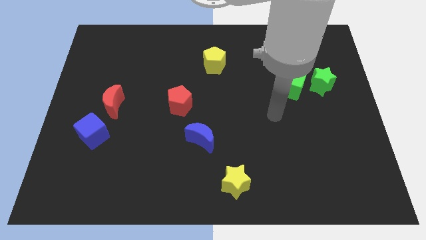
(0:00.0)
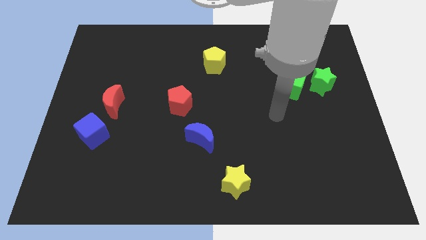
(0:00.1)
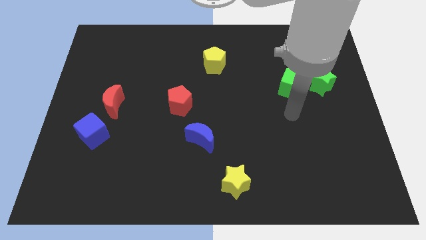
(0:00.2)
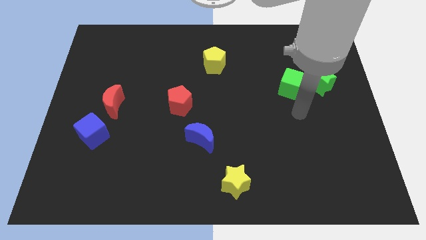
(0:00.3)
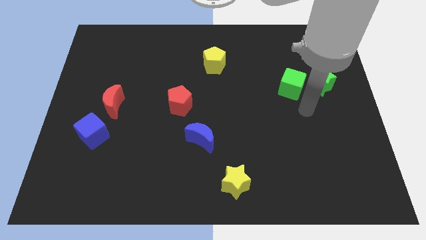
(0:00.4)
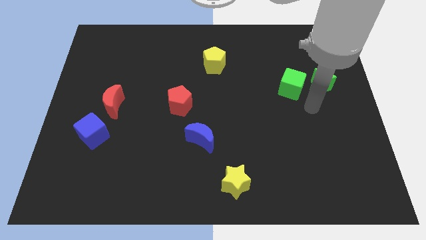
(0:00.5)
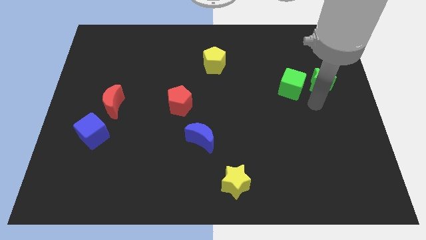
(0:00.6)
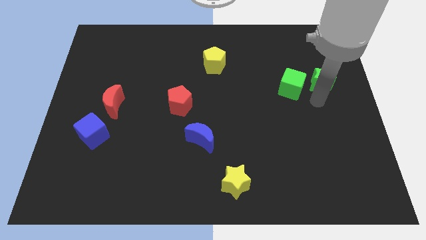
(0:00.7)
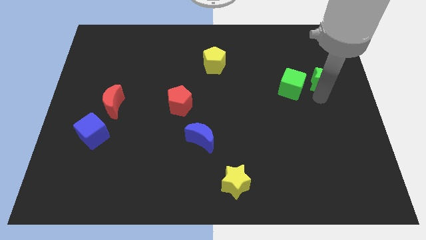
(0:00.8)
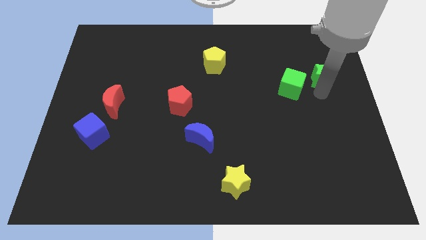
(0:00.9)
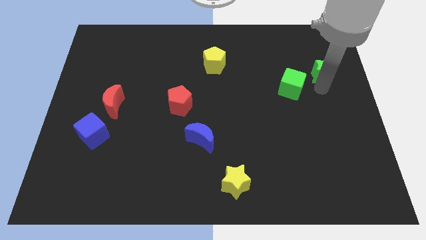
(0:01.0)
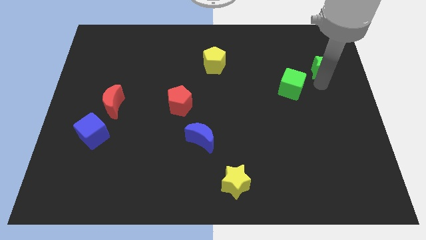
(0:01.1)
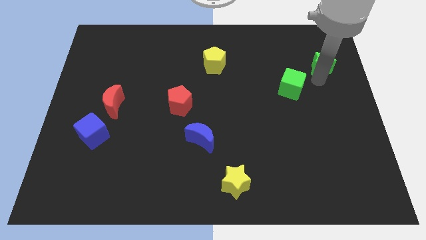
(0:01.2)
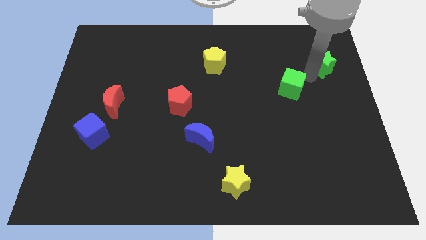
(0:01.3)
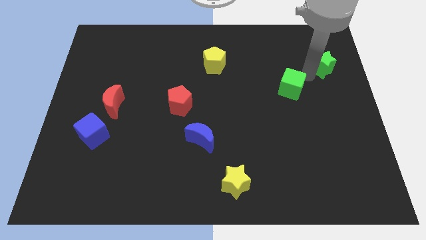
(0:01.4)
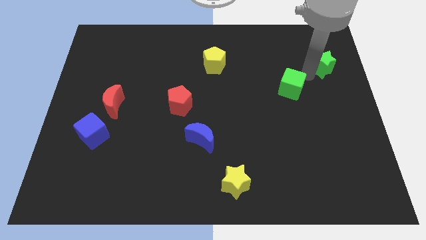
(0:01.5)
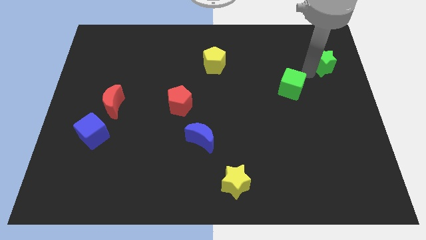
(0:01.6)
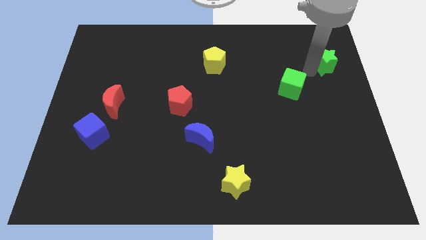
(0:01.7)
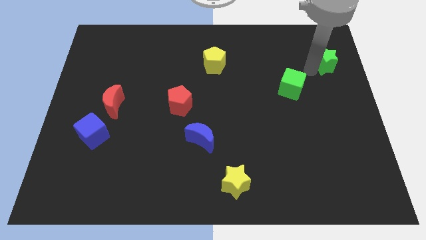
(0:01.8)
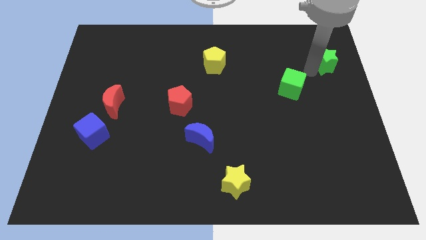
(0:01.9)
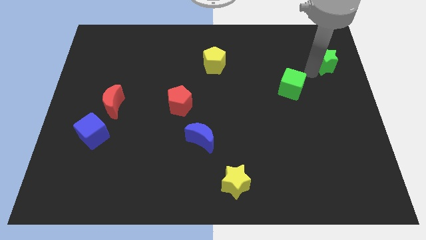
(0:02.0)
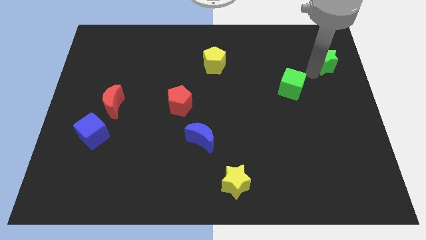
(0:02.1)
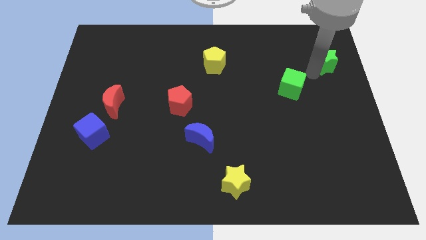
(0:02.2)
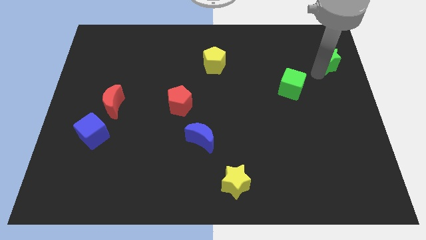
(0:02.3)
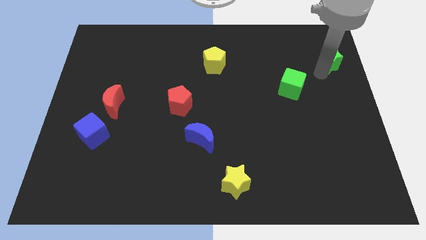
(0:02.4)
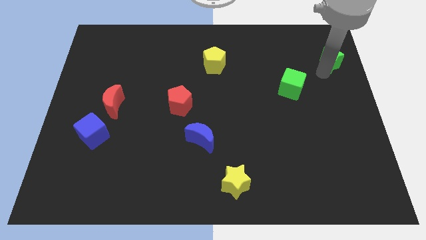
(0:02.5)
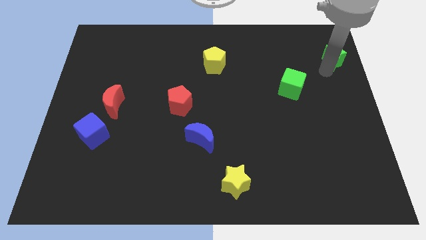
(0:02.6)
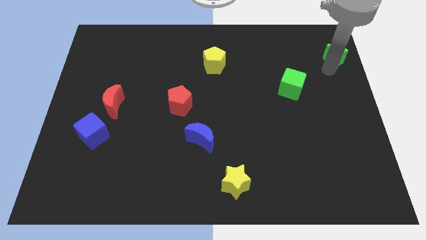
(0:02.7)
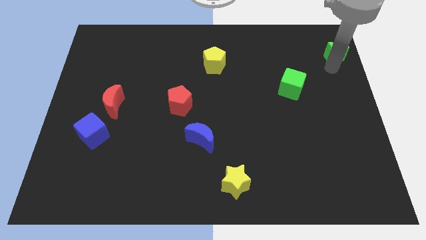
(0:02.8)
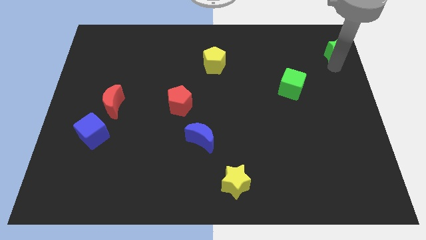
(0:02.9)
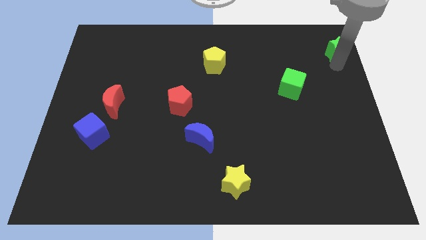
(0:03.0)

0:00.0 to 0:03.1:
drag the green star diagonally top right to the green cube

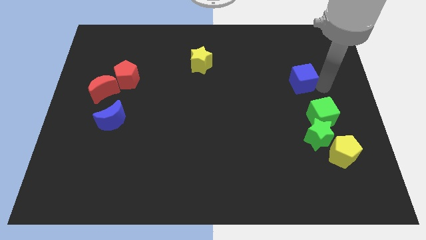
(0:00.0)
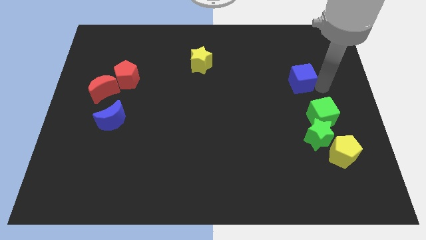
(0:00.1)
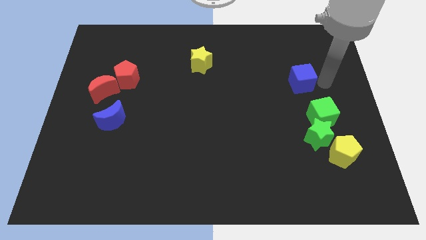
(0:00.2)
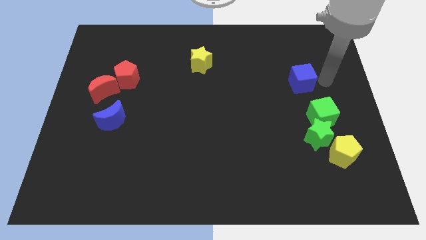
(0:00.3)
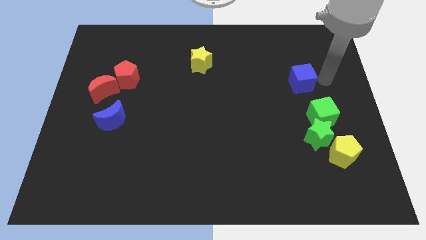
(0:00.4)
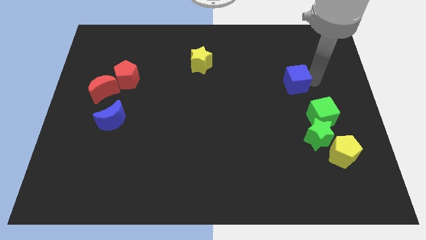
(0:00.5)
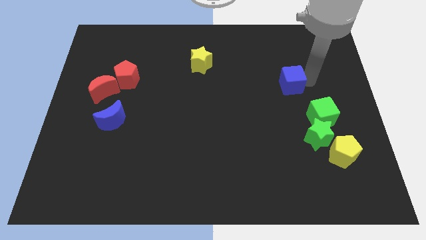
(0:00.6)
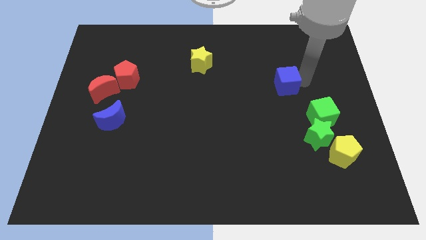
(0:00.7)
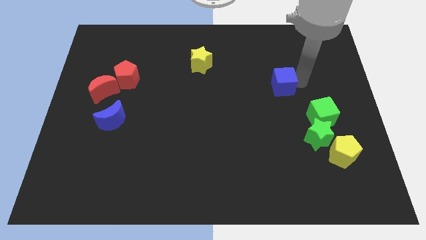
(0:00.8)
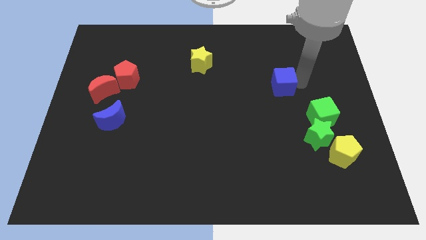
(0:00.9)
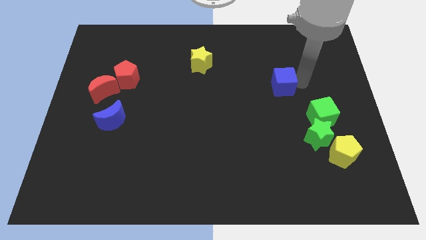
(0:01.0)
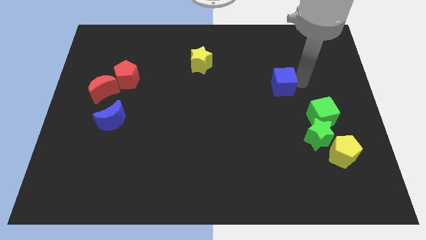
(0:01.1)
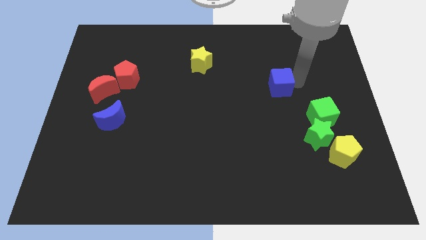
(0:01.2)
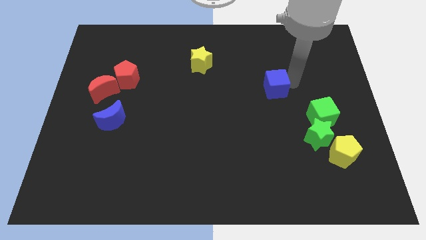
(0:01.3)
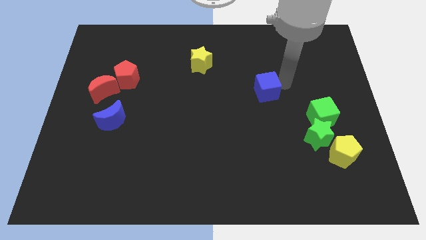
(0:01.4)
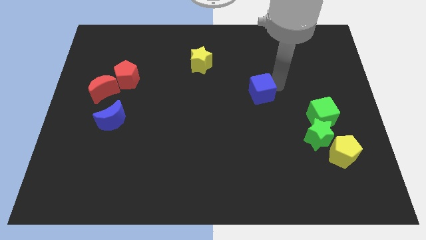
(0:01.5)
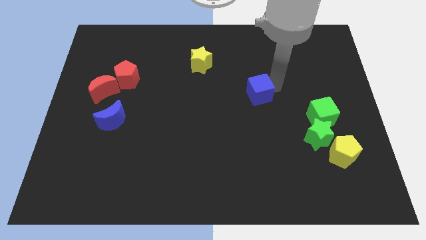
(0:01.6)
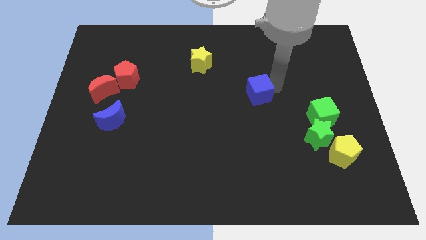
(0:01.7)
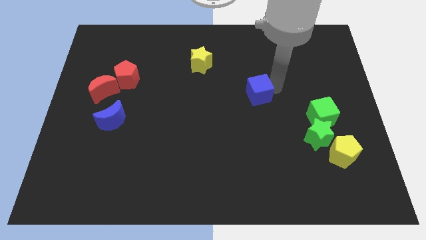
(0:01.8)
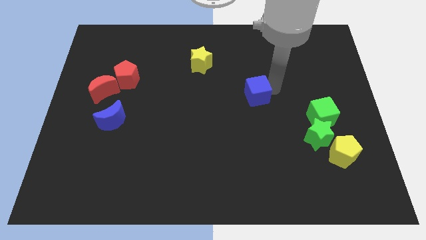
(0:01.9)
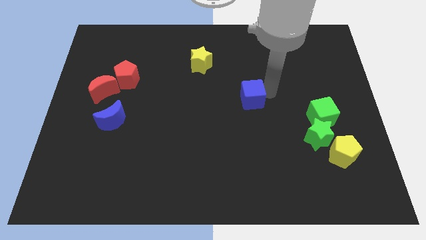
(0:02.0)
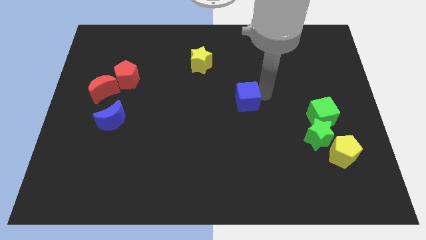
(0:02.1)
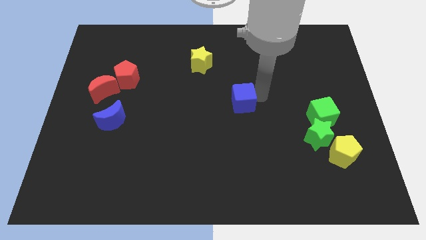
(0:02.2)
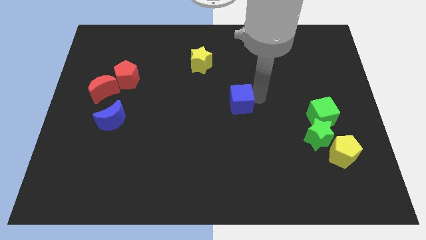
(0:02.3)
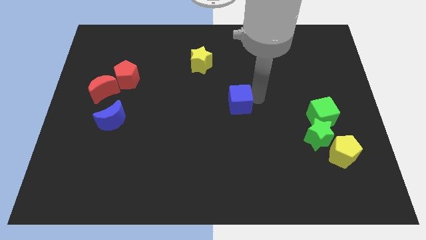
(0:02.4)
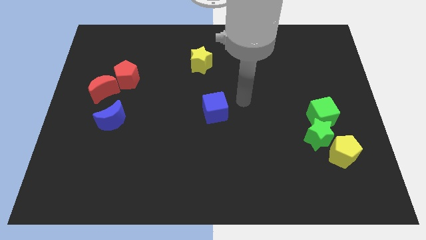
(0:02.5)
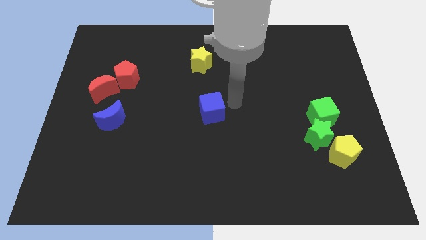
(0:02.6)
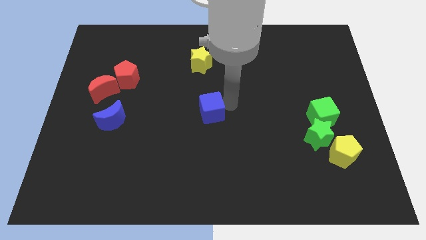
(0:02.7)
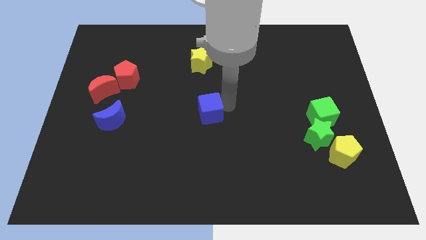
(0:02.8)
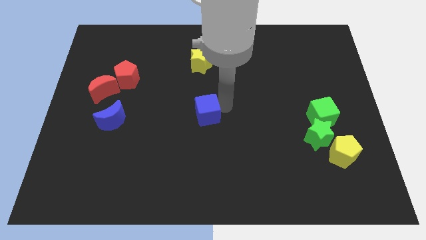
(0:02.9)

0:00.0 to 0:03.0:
move the blue cube to the right of blue moon

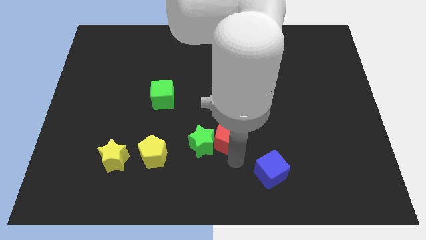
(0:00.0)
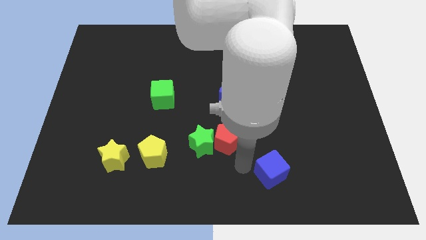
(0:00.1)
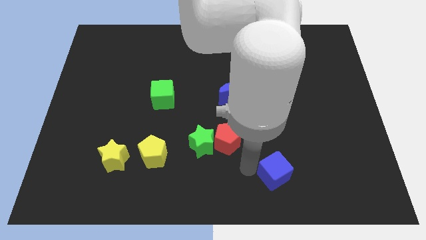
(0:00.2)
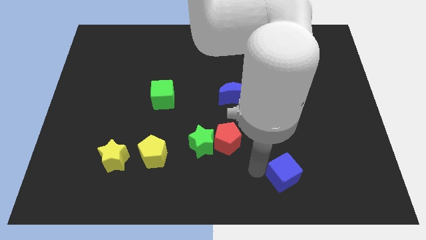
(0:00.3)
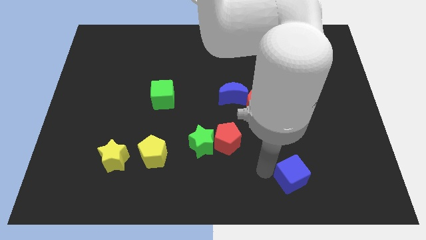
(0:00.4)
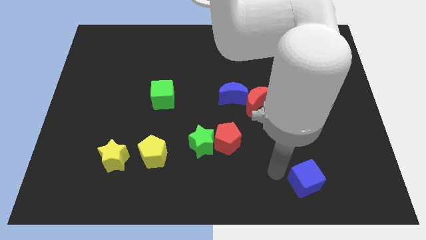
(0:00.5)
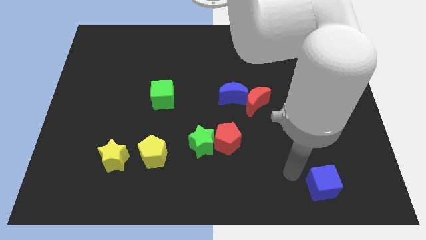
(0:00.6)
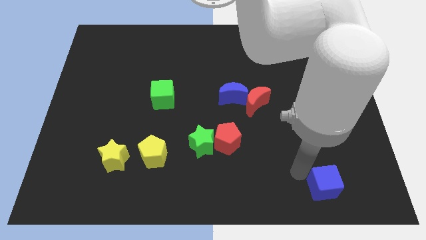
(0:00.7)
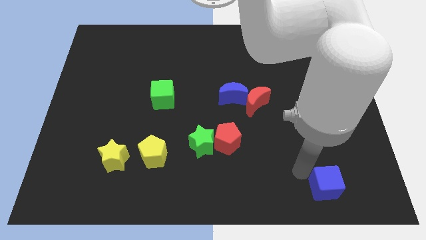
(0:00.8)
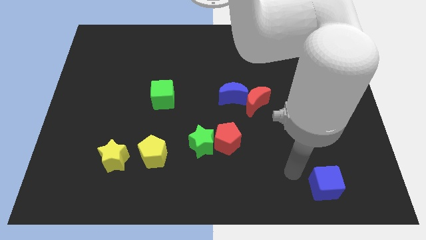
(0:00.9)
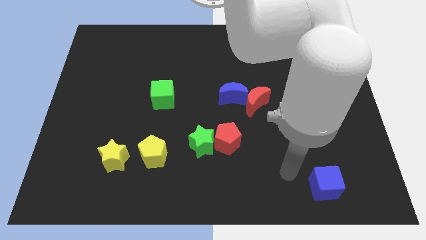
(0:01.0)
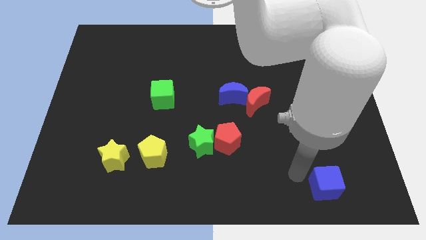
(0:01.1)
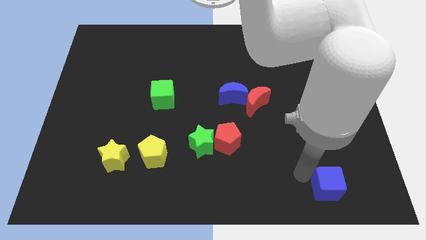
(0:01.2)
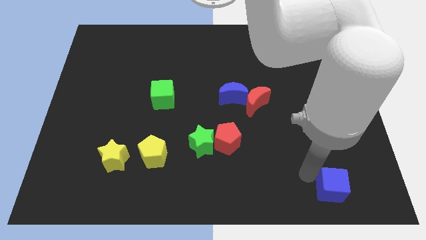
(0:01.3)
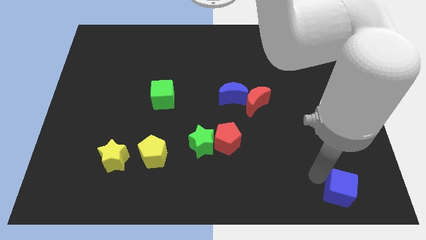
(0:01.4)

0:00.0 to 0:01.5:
move the blue cube slightly to the right

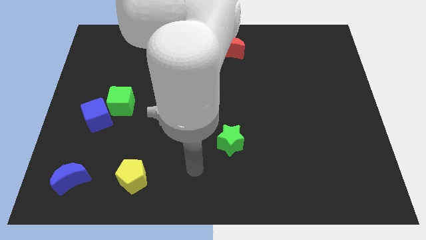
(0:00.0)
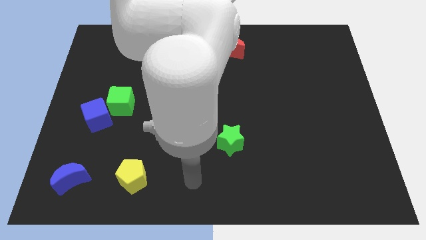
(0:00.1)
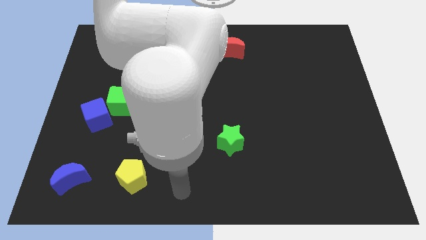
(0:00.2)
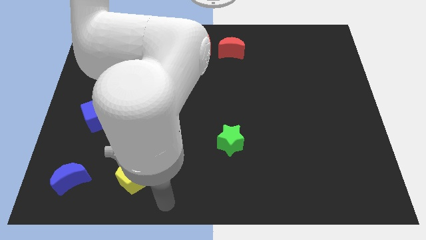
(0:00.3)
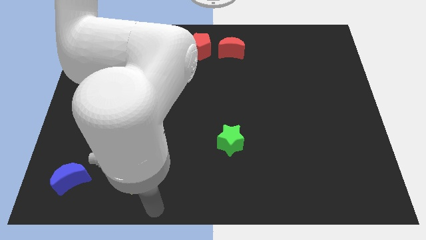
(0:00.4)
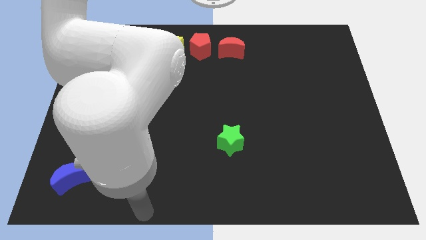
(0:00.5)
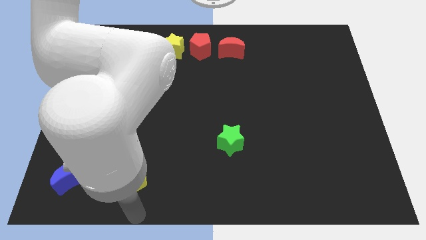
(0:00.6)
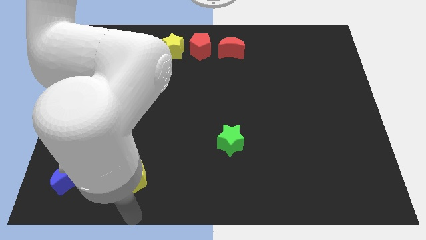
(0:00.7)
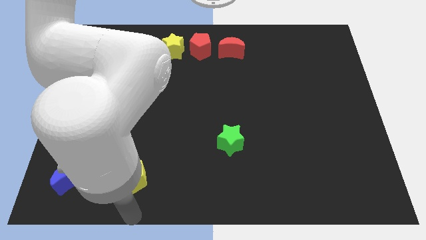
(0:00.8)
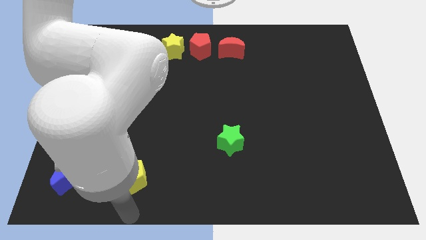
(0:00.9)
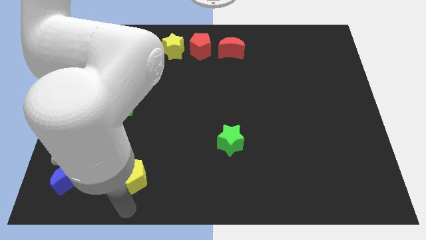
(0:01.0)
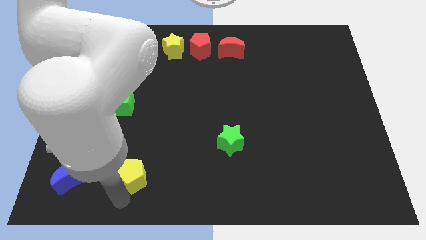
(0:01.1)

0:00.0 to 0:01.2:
place the arm down to the yellow pentagon

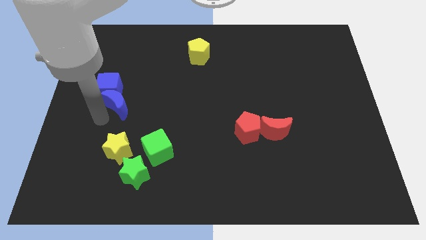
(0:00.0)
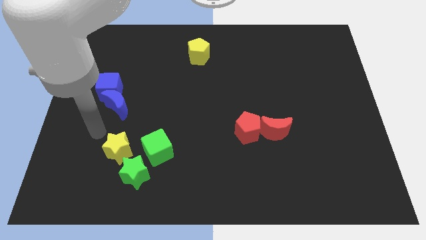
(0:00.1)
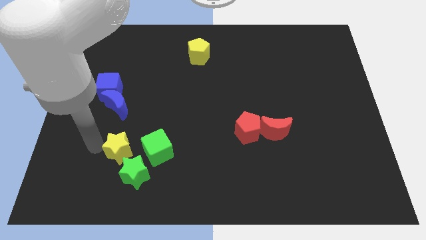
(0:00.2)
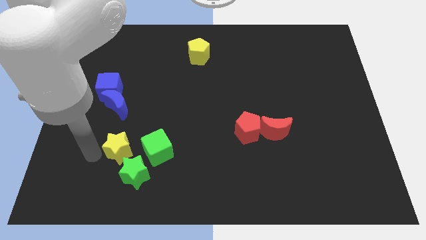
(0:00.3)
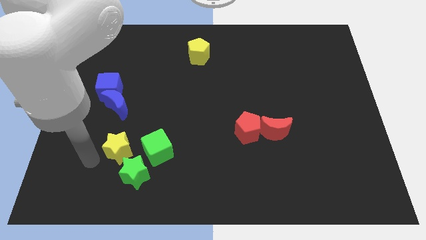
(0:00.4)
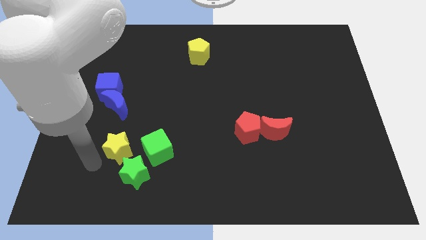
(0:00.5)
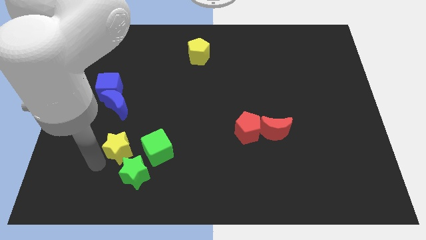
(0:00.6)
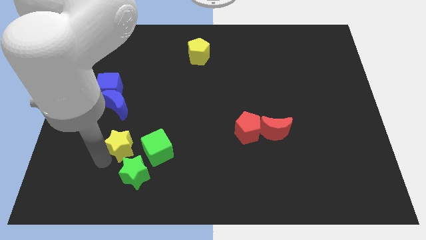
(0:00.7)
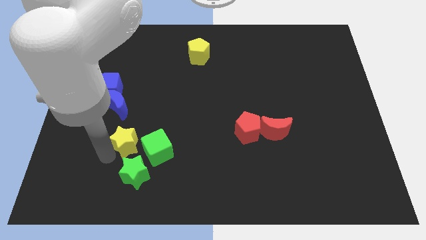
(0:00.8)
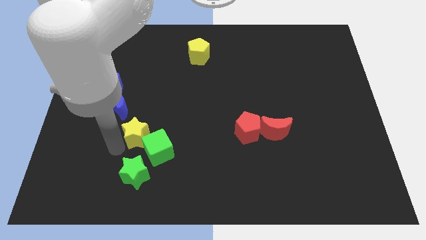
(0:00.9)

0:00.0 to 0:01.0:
push the yellow star to the bottom right of the blue crescent
